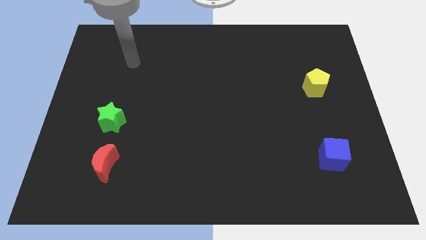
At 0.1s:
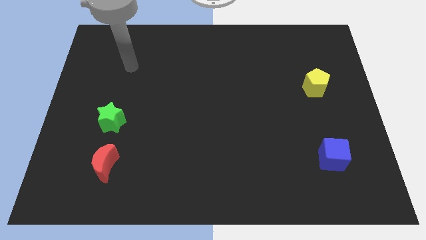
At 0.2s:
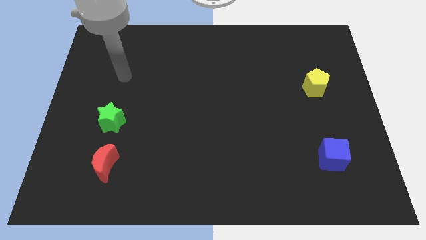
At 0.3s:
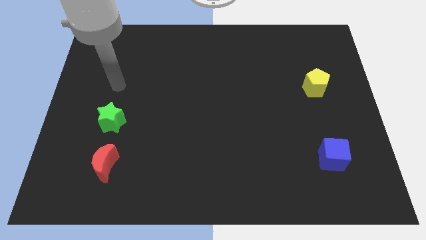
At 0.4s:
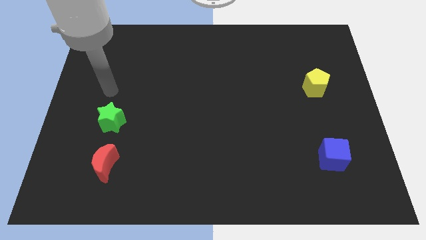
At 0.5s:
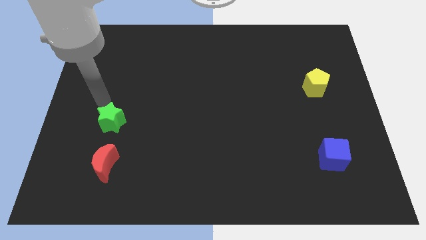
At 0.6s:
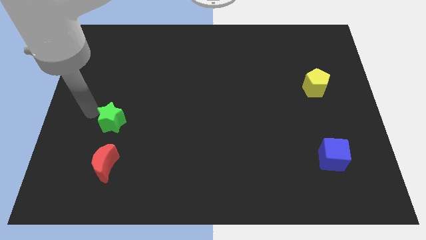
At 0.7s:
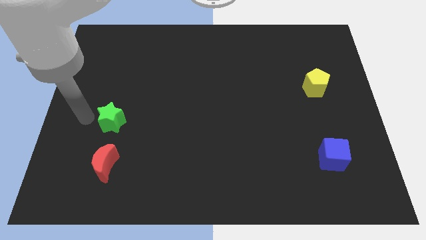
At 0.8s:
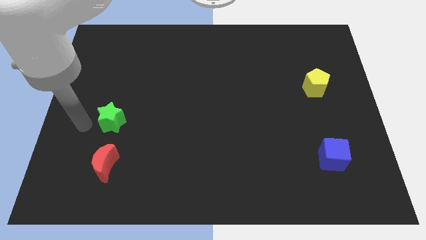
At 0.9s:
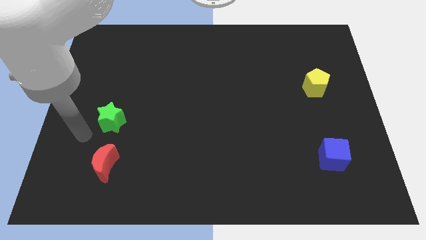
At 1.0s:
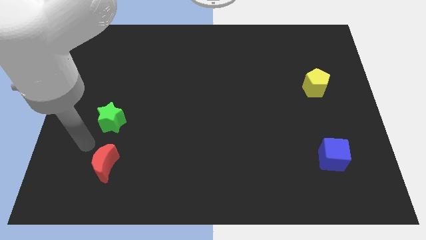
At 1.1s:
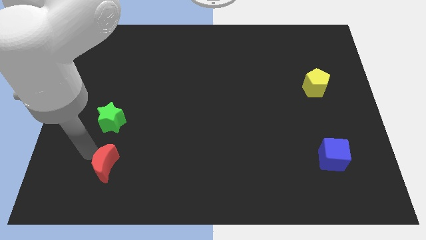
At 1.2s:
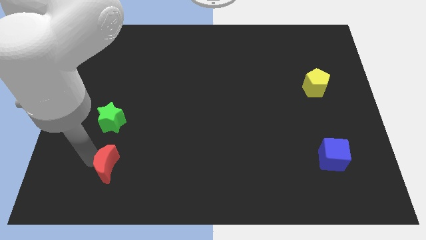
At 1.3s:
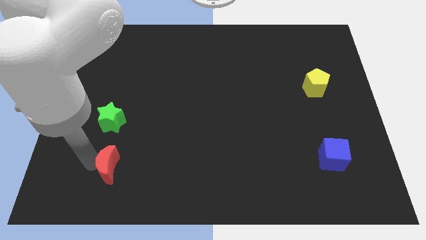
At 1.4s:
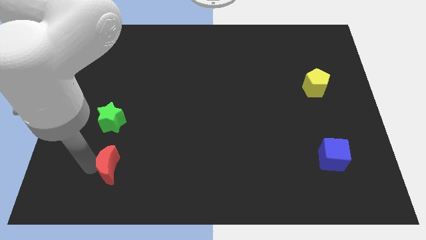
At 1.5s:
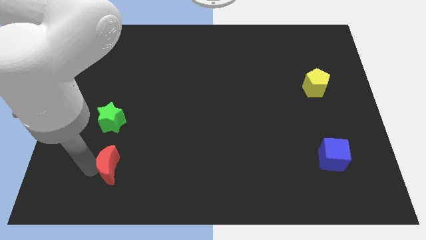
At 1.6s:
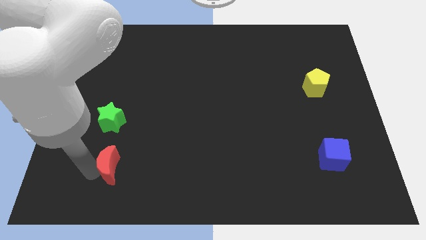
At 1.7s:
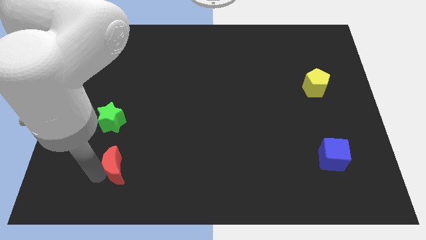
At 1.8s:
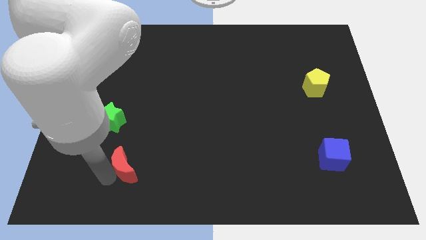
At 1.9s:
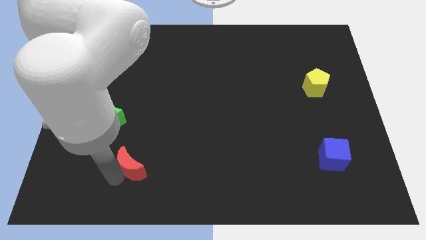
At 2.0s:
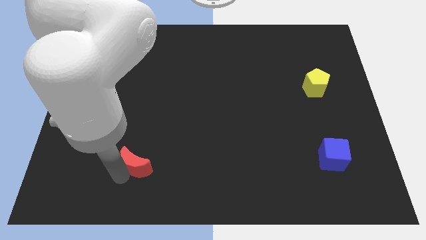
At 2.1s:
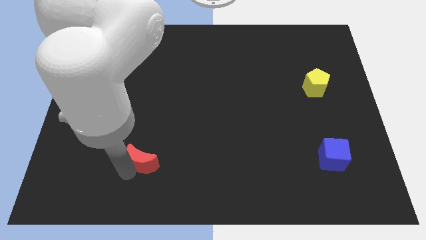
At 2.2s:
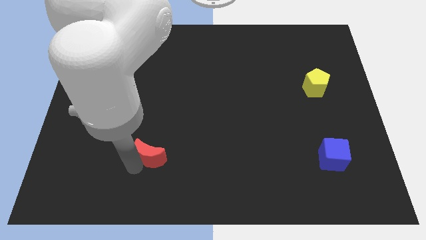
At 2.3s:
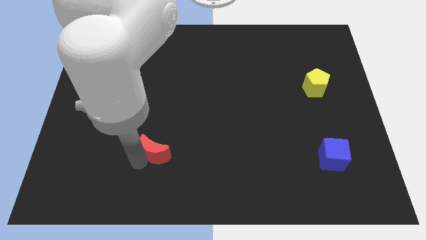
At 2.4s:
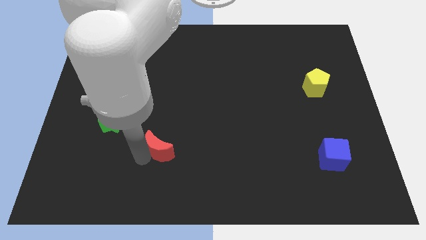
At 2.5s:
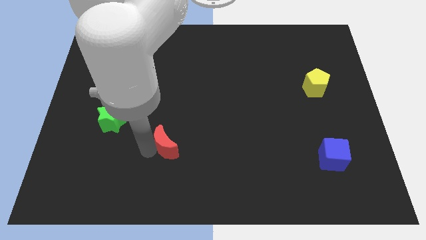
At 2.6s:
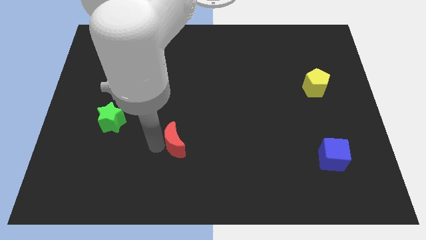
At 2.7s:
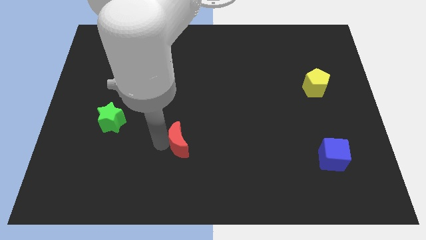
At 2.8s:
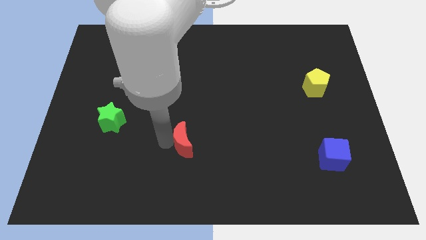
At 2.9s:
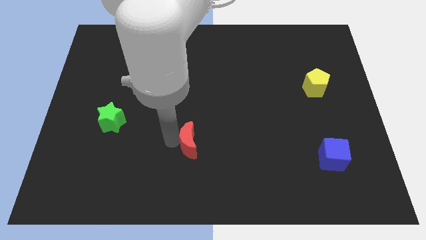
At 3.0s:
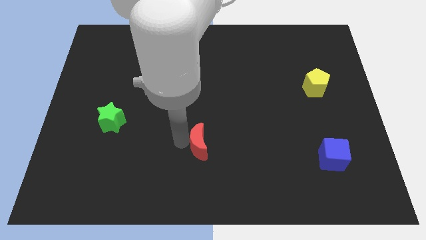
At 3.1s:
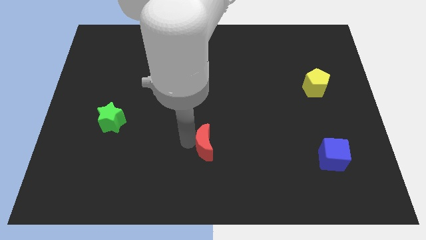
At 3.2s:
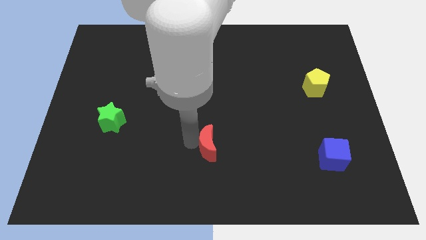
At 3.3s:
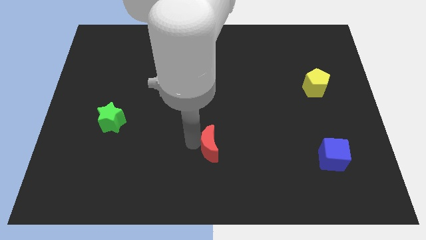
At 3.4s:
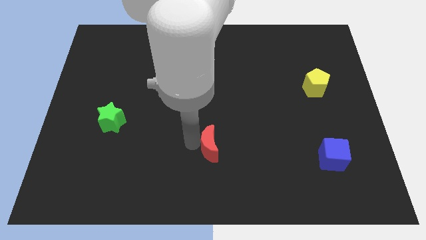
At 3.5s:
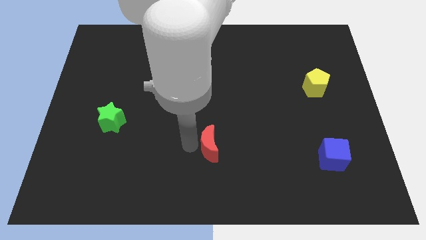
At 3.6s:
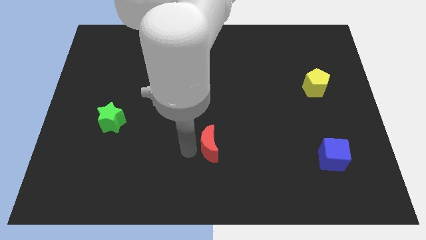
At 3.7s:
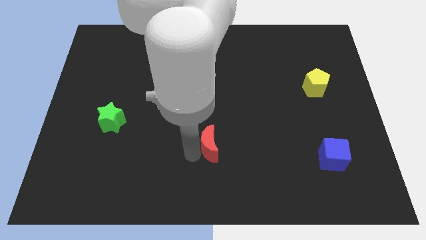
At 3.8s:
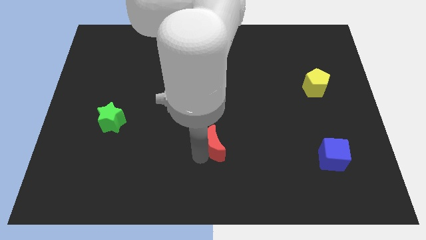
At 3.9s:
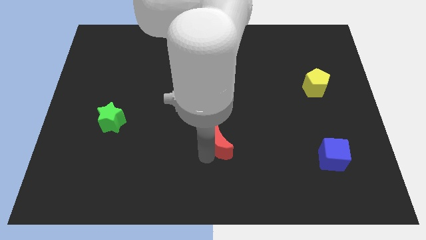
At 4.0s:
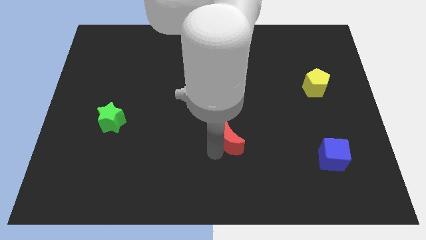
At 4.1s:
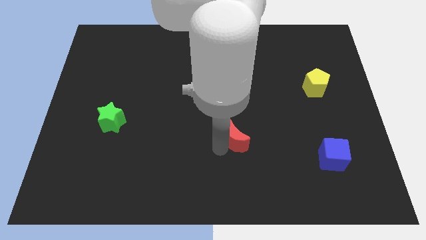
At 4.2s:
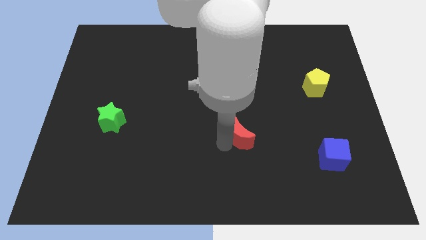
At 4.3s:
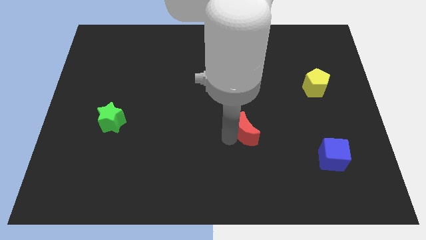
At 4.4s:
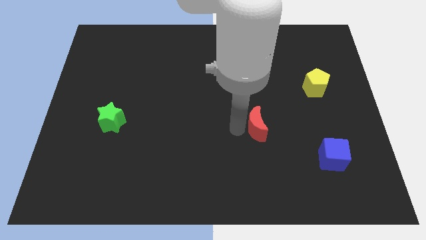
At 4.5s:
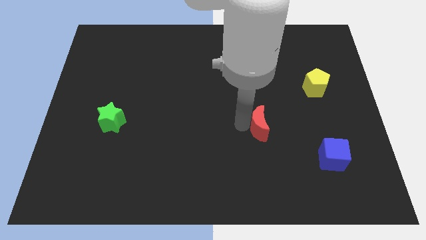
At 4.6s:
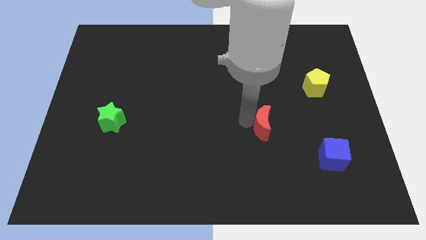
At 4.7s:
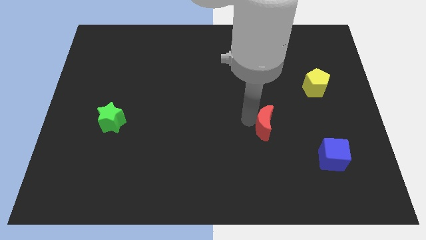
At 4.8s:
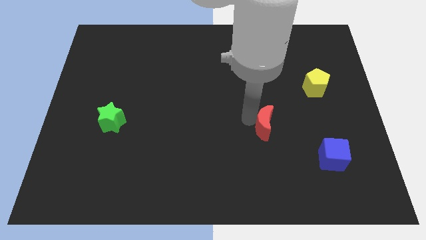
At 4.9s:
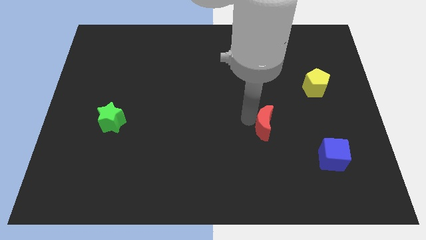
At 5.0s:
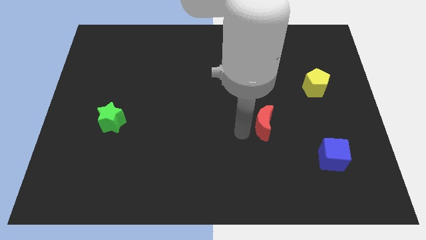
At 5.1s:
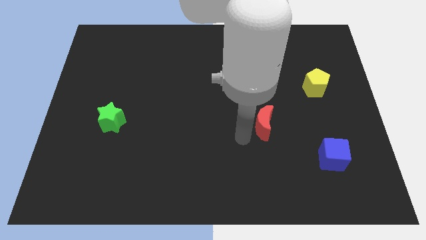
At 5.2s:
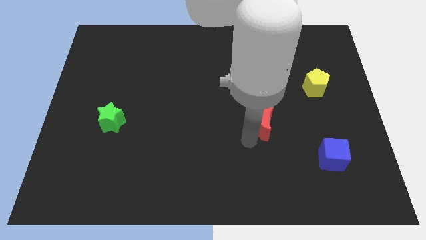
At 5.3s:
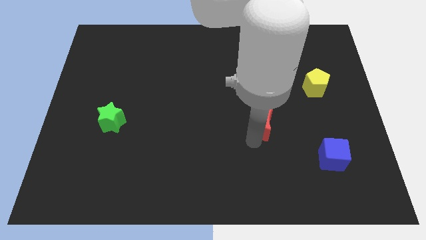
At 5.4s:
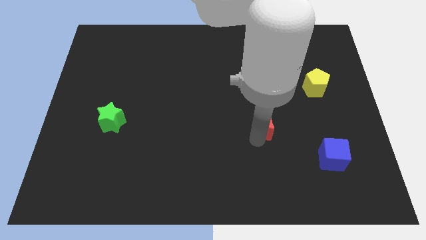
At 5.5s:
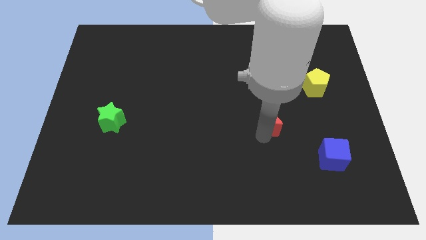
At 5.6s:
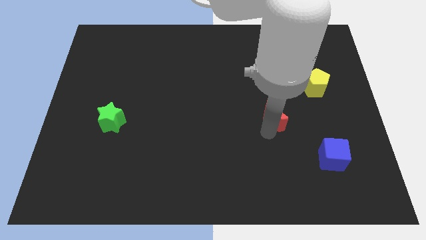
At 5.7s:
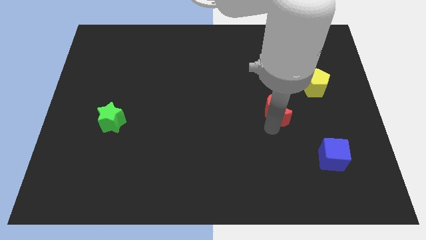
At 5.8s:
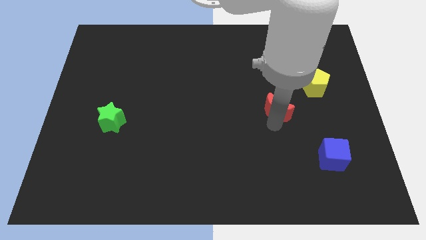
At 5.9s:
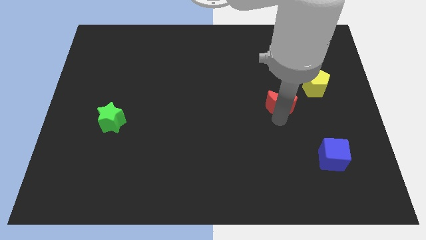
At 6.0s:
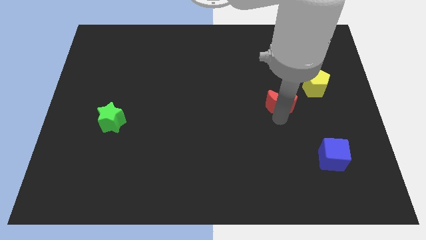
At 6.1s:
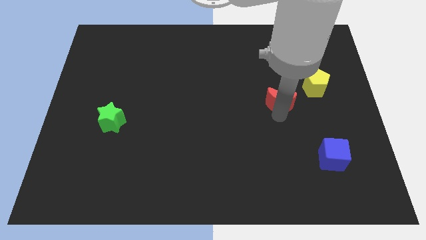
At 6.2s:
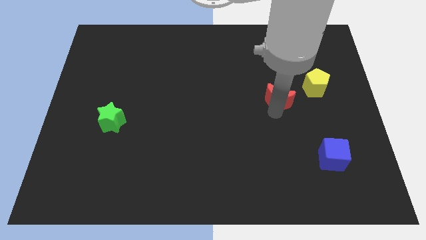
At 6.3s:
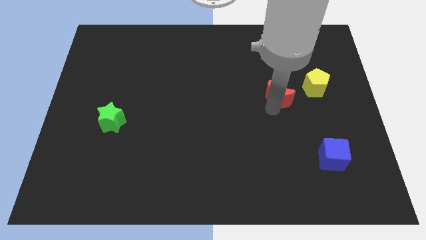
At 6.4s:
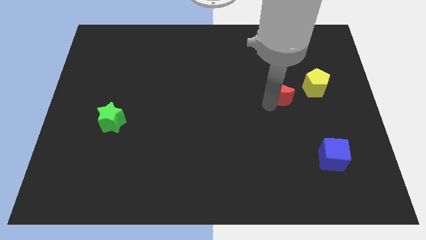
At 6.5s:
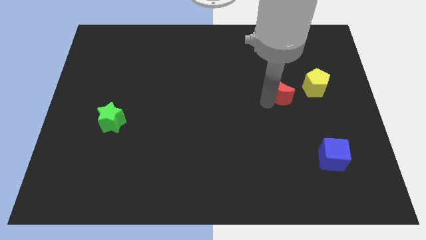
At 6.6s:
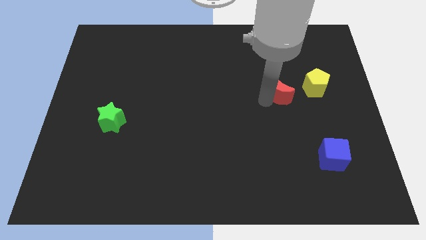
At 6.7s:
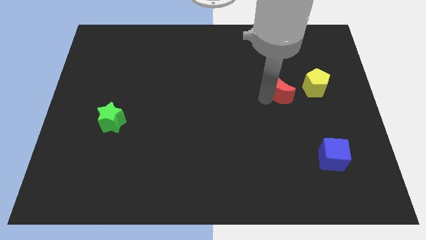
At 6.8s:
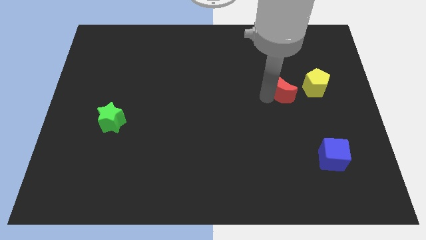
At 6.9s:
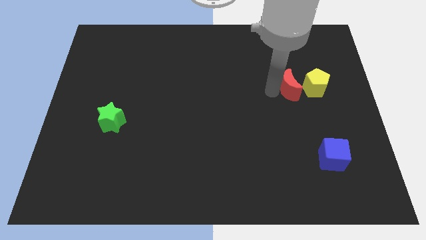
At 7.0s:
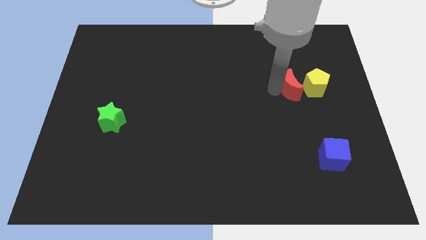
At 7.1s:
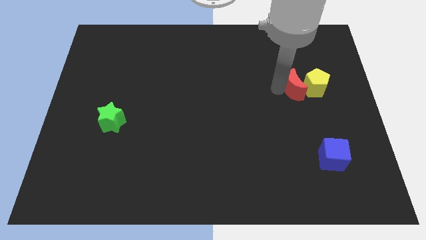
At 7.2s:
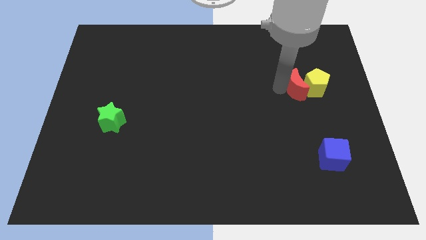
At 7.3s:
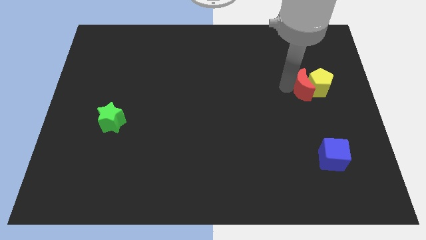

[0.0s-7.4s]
slide the red moon close to the yellow pentagon

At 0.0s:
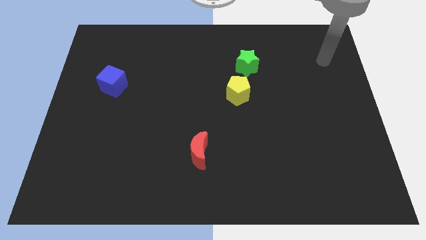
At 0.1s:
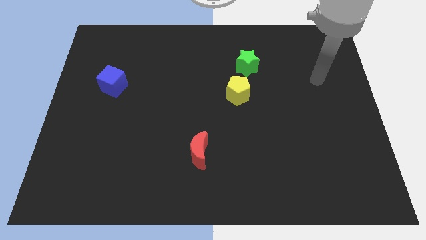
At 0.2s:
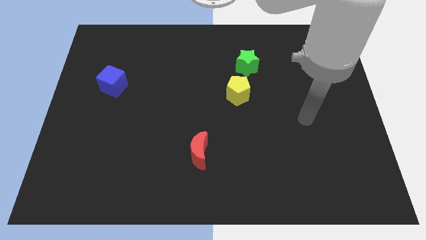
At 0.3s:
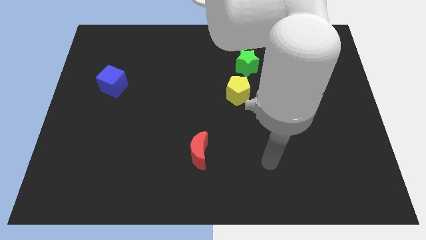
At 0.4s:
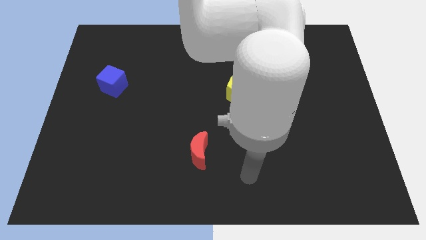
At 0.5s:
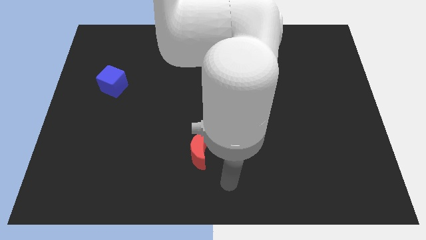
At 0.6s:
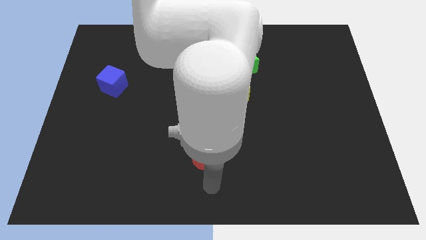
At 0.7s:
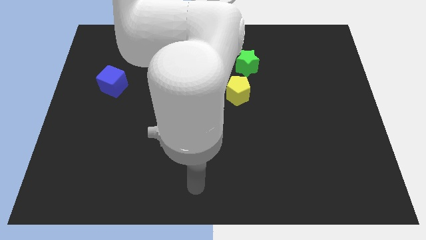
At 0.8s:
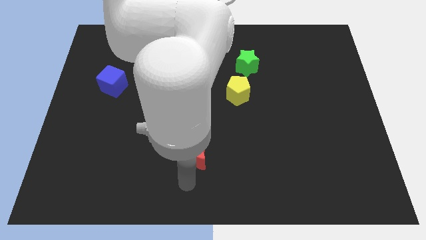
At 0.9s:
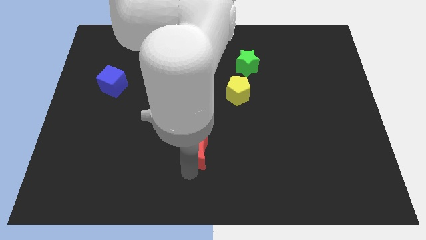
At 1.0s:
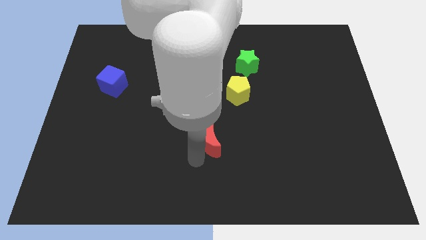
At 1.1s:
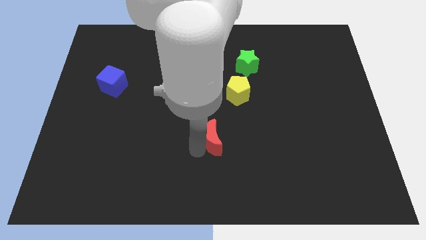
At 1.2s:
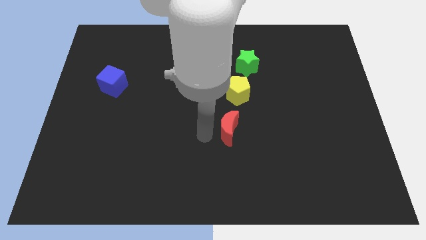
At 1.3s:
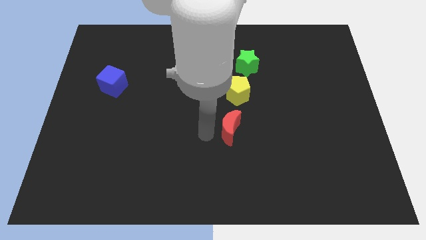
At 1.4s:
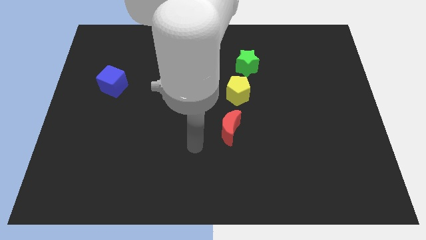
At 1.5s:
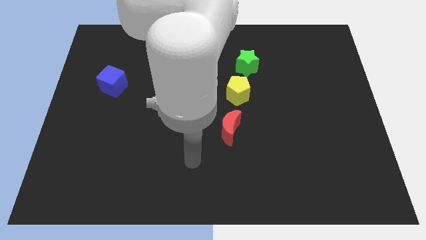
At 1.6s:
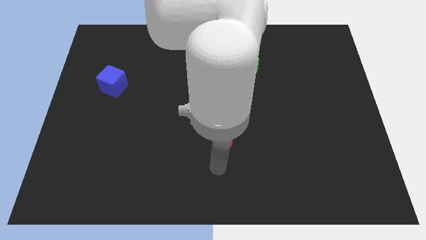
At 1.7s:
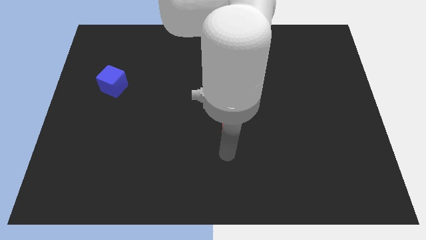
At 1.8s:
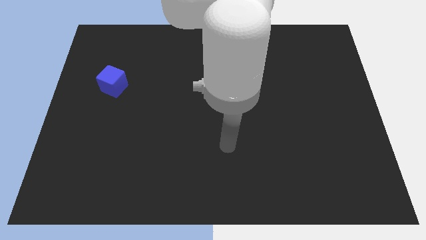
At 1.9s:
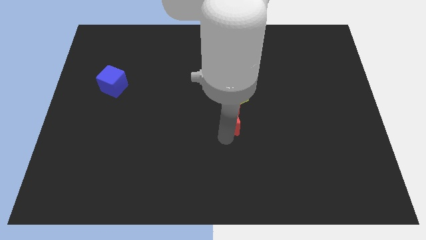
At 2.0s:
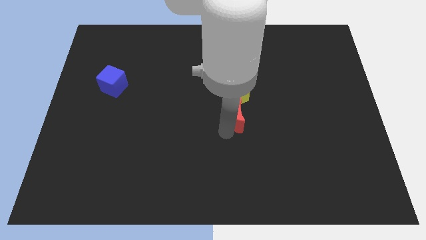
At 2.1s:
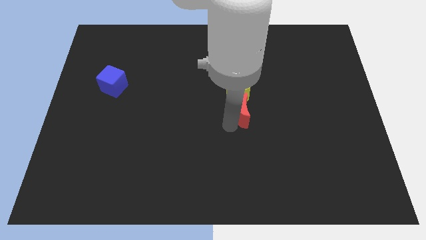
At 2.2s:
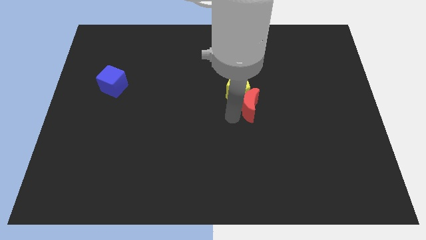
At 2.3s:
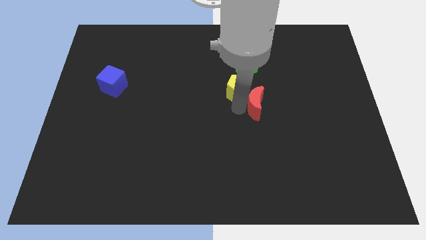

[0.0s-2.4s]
slide the moon next to the yellow block
